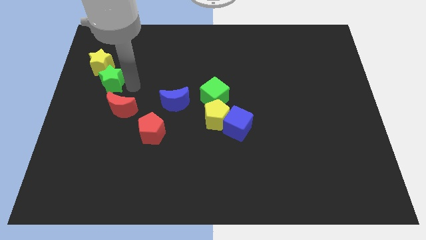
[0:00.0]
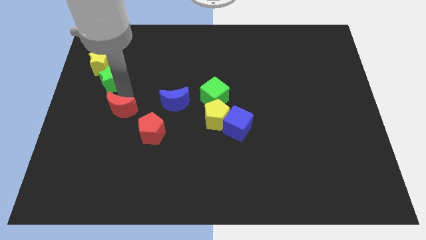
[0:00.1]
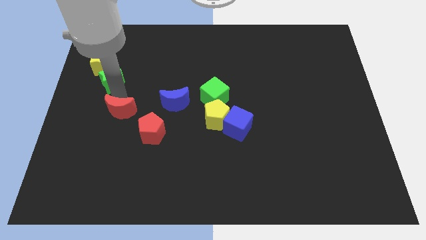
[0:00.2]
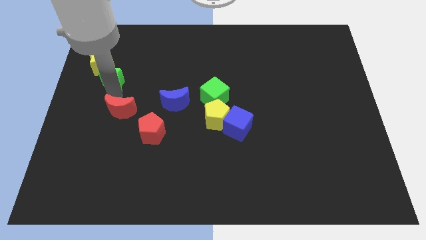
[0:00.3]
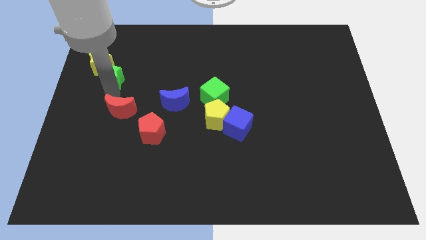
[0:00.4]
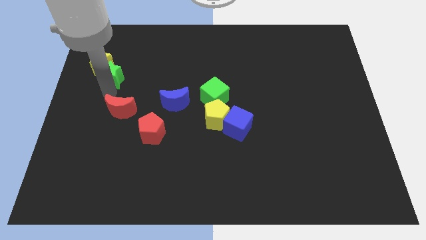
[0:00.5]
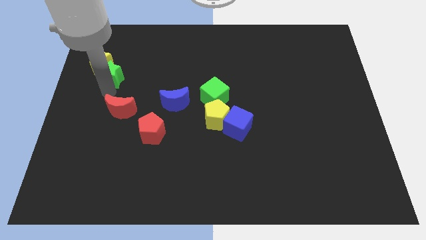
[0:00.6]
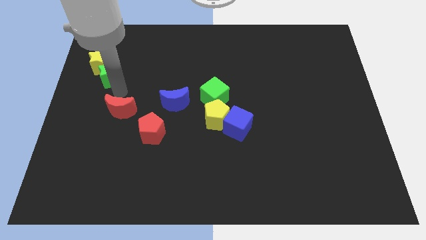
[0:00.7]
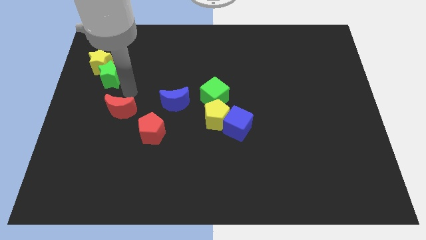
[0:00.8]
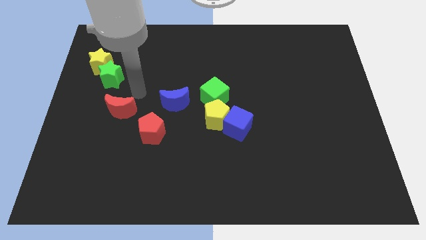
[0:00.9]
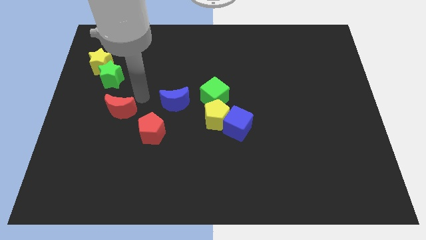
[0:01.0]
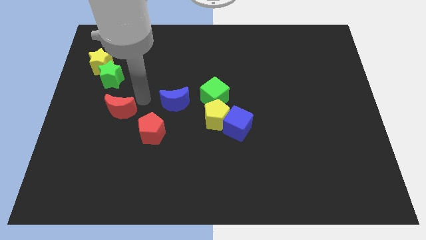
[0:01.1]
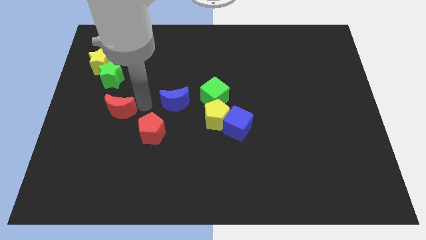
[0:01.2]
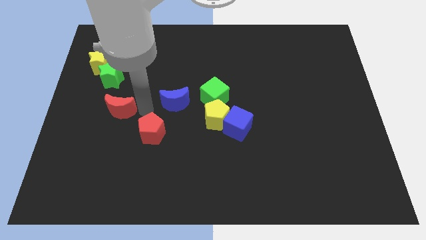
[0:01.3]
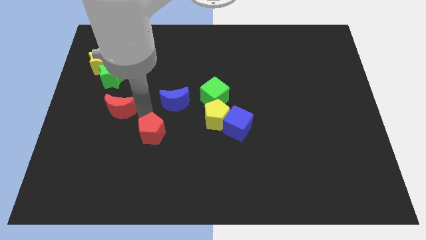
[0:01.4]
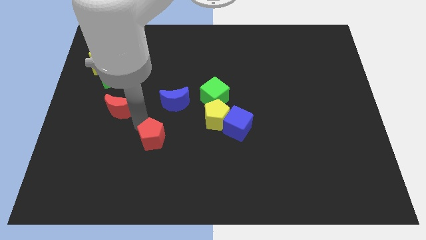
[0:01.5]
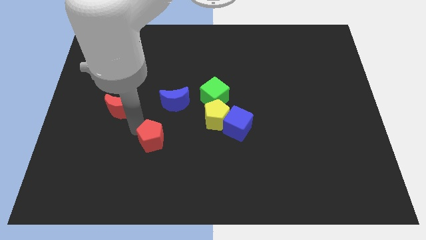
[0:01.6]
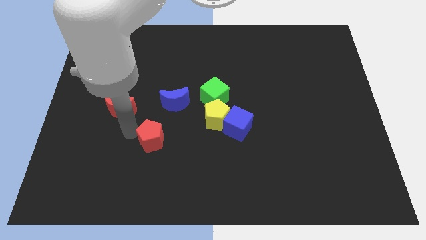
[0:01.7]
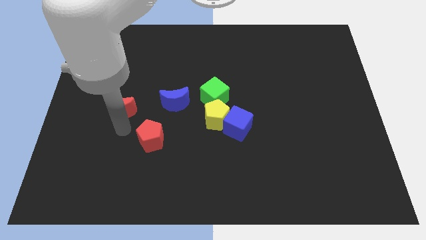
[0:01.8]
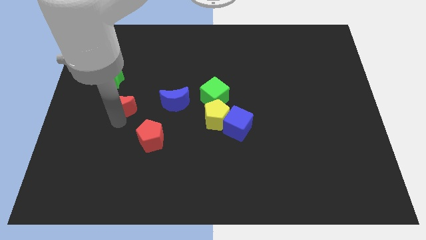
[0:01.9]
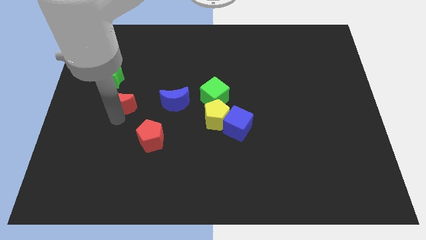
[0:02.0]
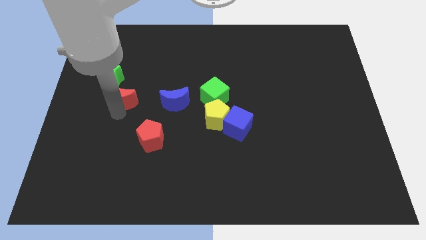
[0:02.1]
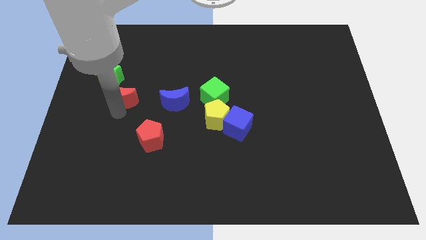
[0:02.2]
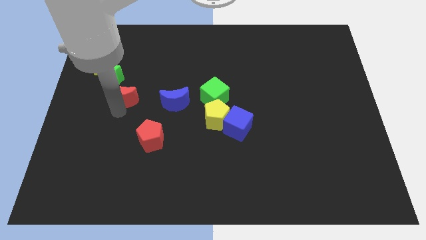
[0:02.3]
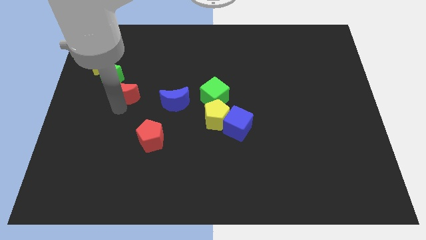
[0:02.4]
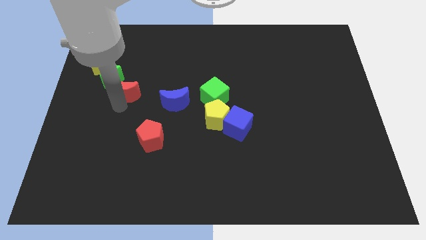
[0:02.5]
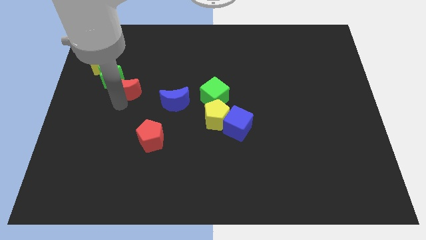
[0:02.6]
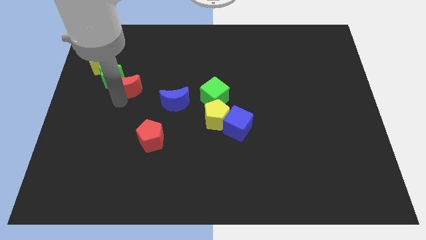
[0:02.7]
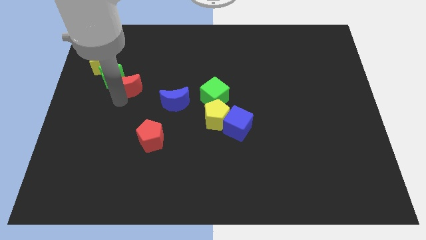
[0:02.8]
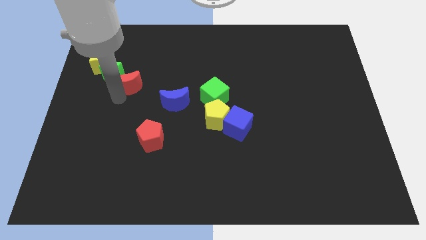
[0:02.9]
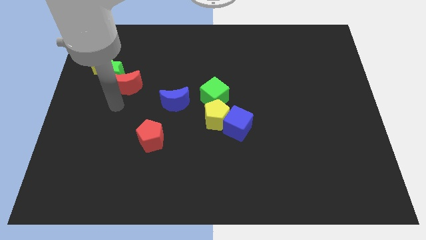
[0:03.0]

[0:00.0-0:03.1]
move red moon into green star

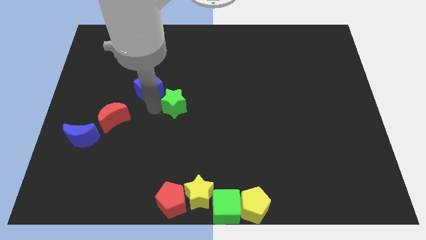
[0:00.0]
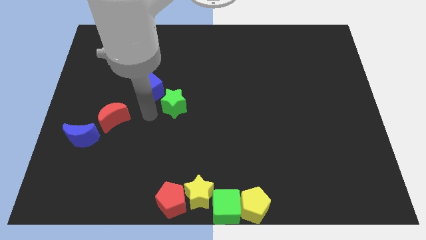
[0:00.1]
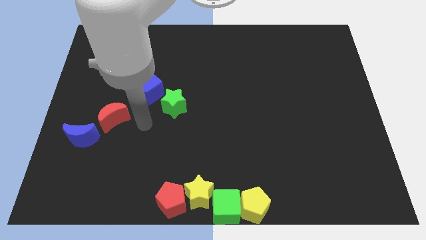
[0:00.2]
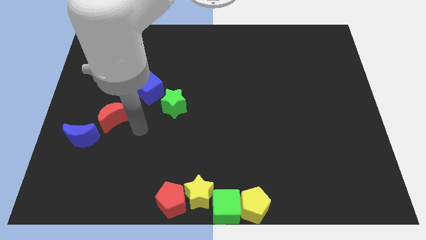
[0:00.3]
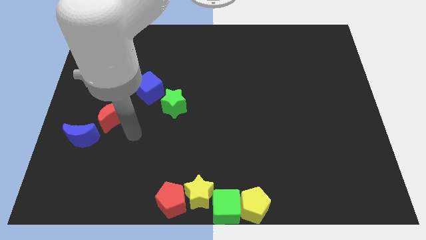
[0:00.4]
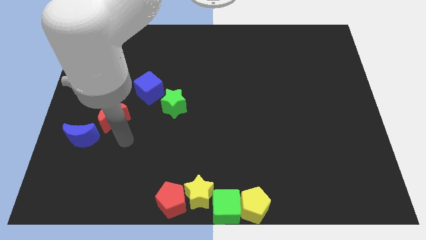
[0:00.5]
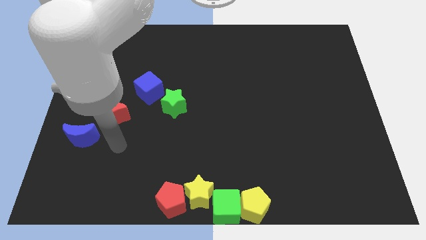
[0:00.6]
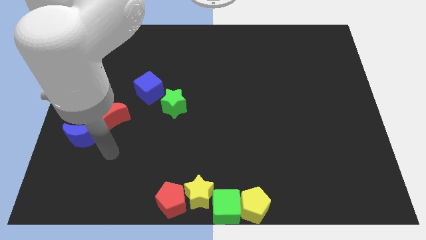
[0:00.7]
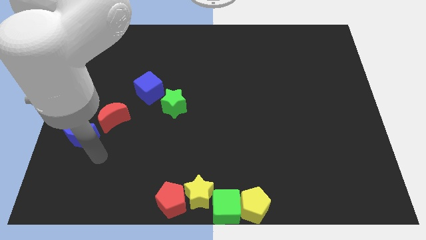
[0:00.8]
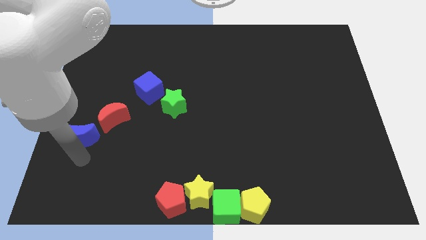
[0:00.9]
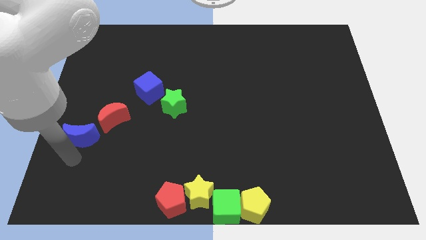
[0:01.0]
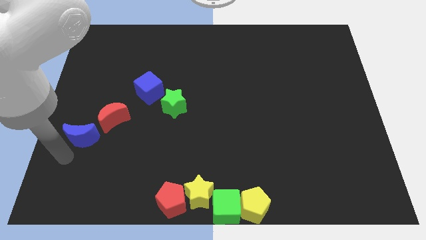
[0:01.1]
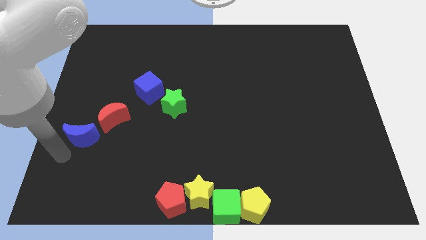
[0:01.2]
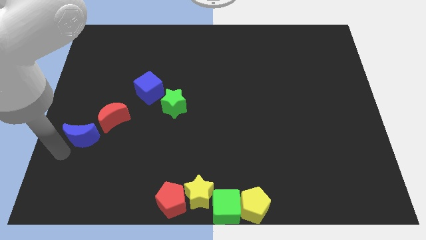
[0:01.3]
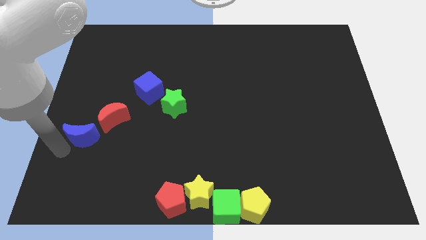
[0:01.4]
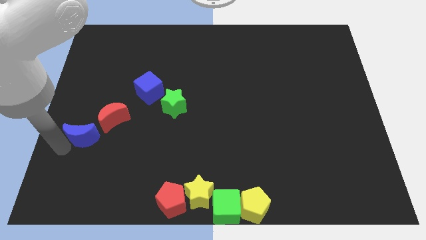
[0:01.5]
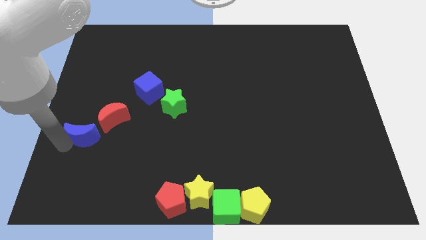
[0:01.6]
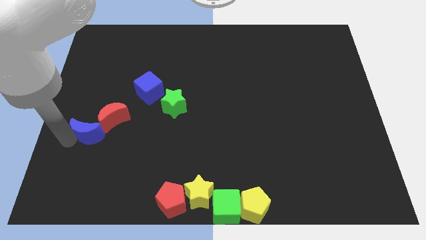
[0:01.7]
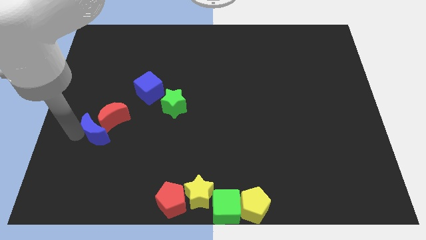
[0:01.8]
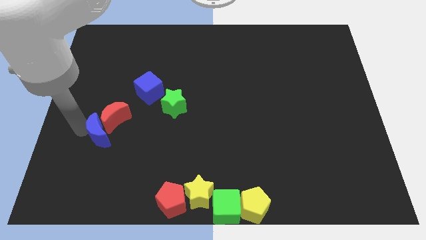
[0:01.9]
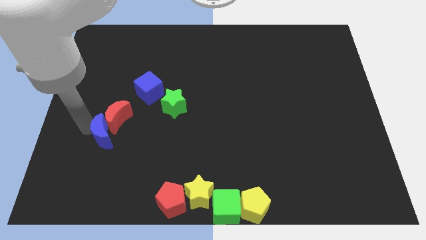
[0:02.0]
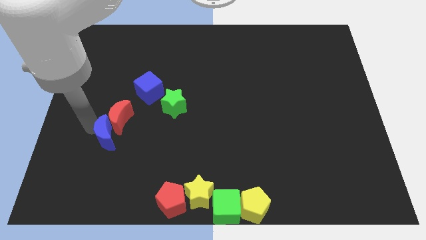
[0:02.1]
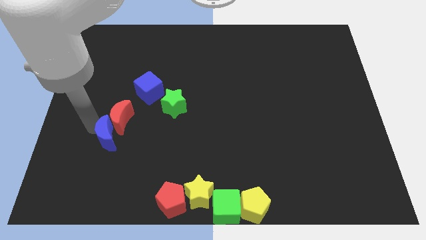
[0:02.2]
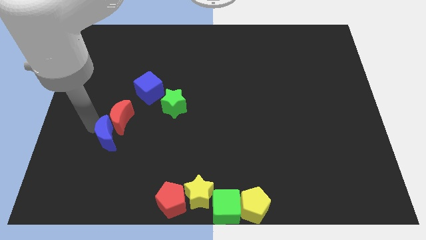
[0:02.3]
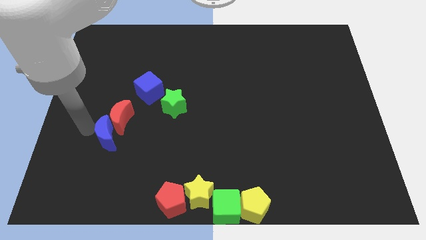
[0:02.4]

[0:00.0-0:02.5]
push red crescent with the help of blue crescent towards the blue cube

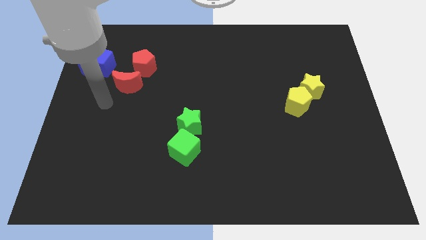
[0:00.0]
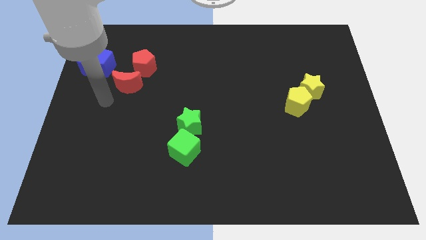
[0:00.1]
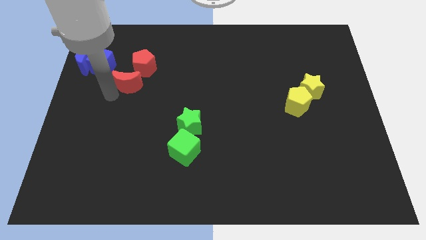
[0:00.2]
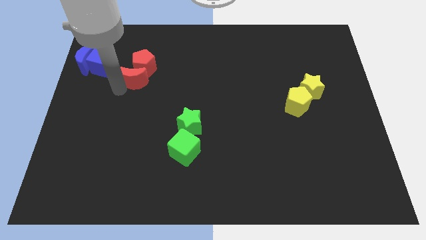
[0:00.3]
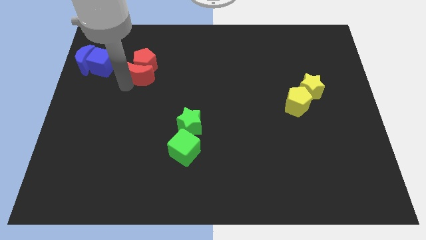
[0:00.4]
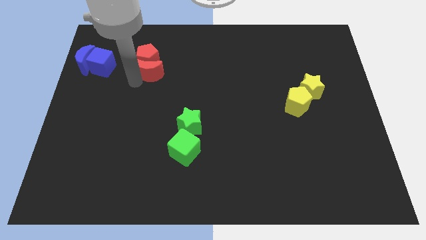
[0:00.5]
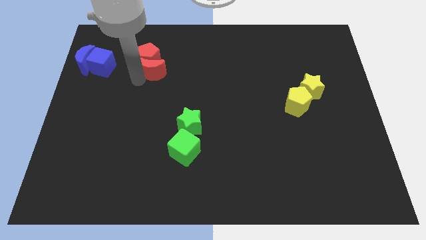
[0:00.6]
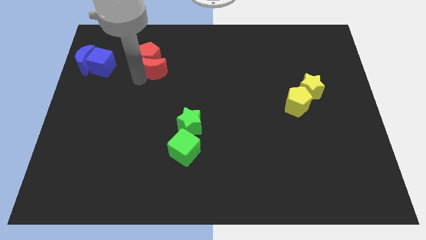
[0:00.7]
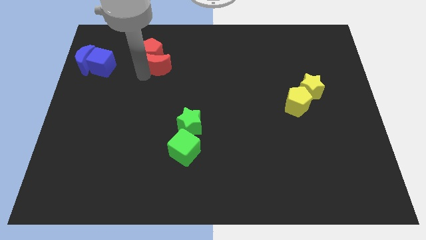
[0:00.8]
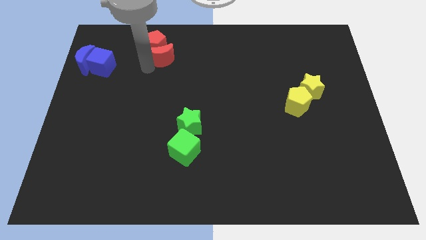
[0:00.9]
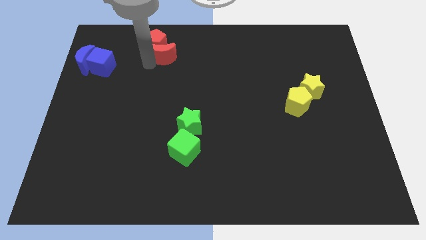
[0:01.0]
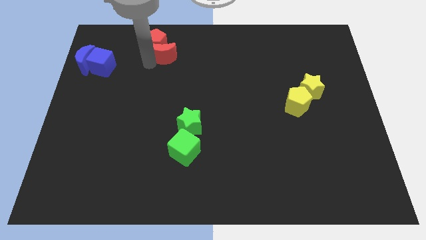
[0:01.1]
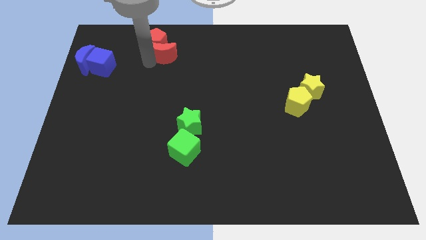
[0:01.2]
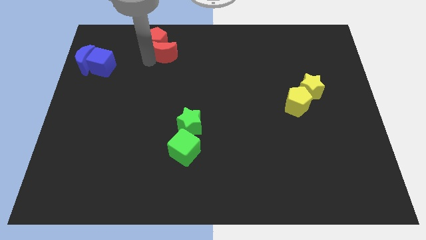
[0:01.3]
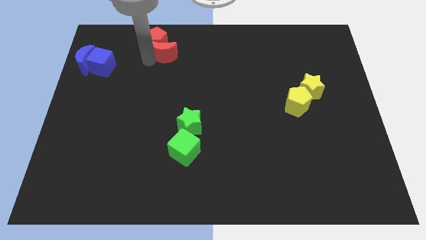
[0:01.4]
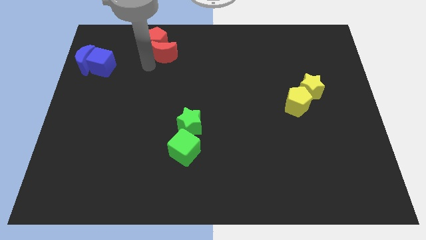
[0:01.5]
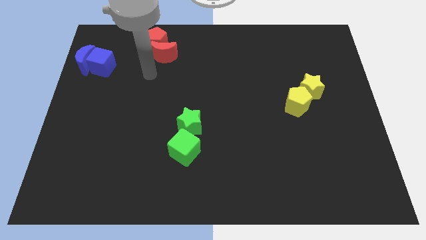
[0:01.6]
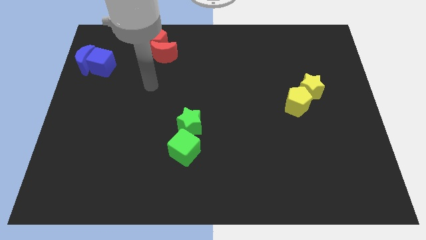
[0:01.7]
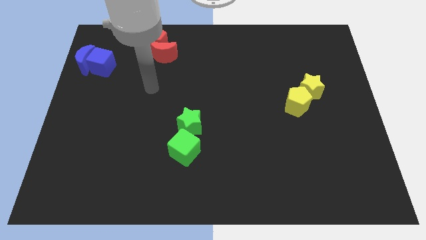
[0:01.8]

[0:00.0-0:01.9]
push the red crescent into the red pentagon

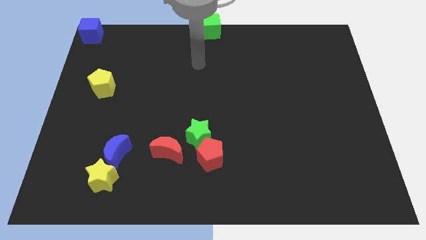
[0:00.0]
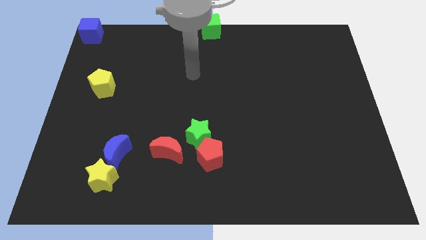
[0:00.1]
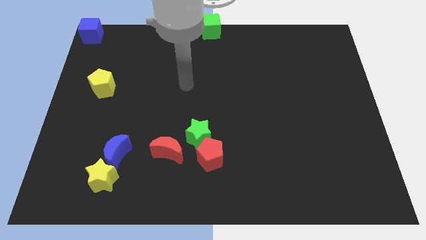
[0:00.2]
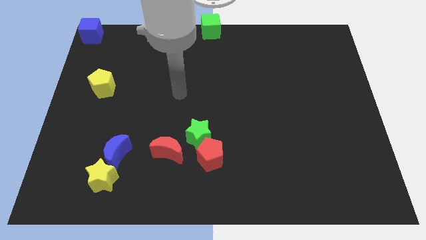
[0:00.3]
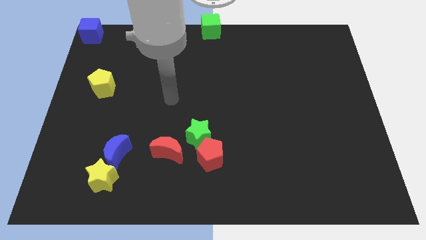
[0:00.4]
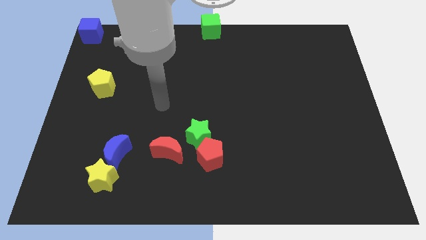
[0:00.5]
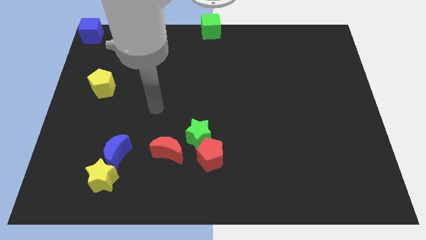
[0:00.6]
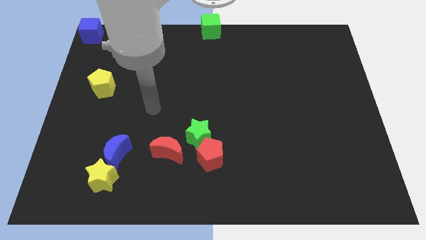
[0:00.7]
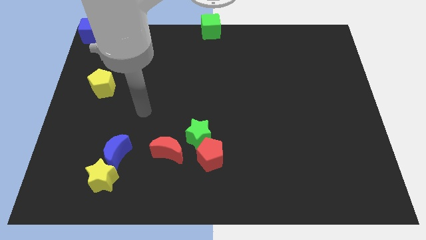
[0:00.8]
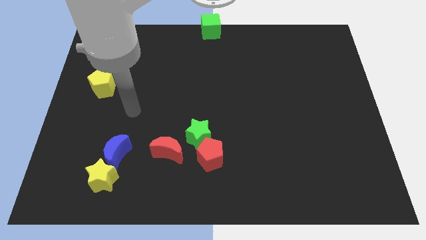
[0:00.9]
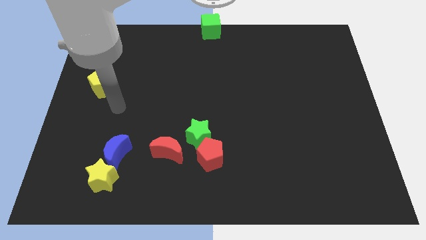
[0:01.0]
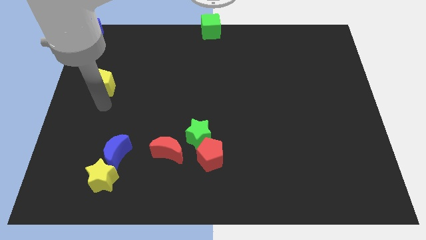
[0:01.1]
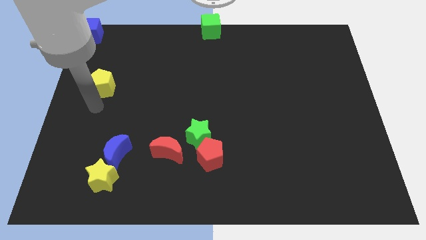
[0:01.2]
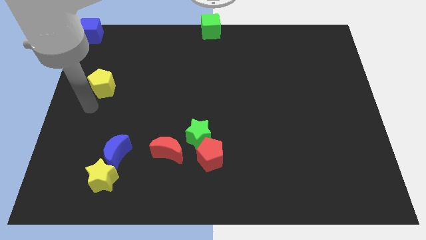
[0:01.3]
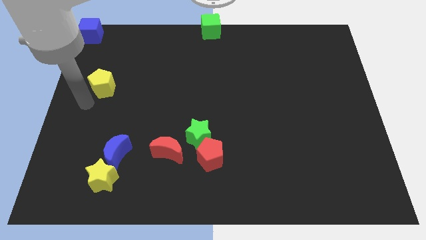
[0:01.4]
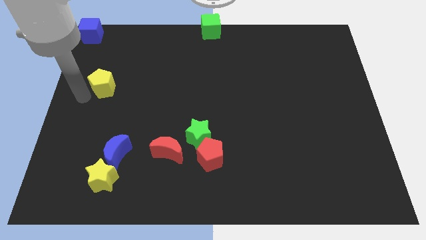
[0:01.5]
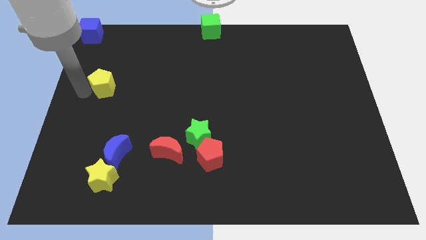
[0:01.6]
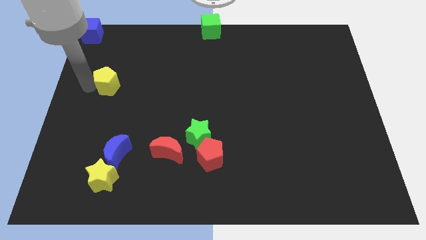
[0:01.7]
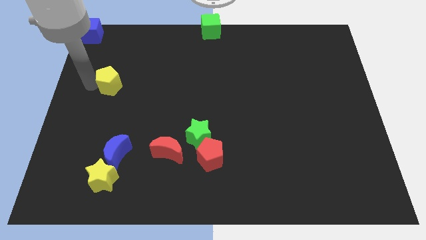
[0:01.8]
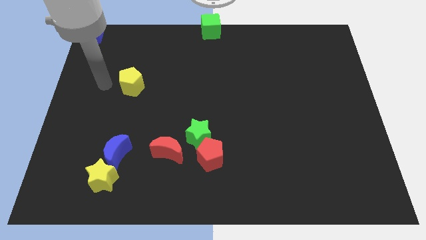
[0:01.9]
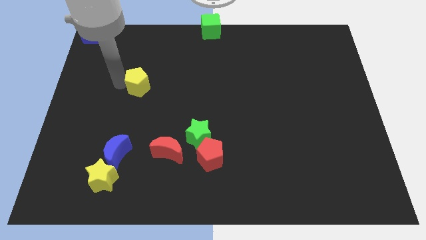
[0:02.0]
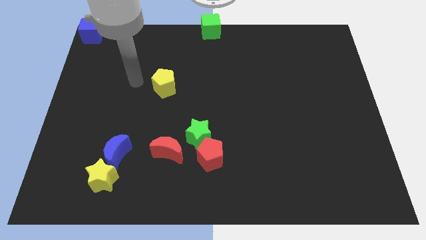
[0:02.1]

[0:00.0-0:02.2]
place the yellow pentagon vertically to the red moon
